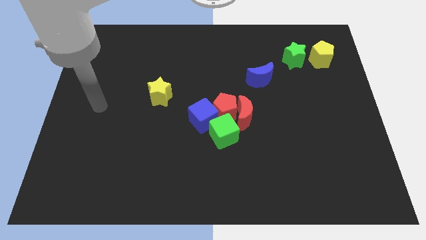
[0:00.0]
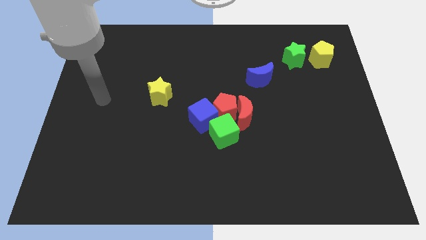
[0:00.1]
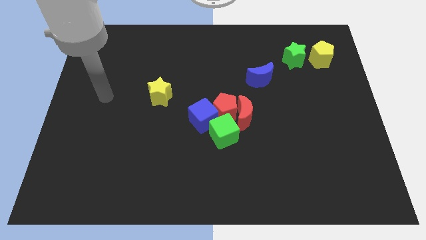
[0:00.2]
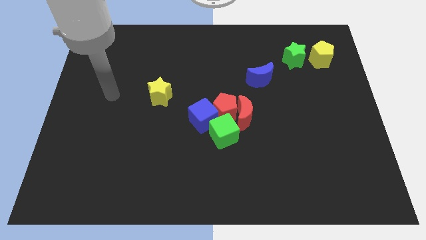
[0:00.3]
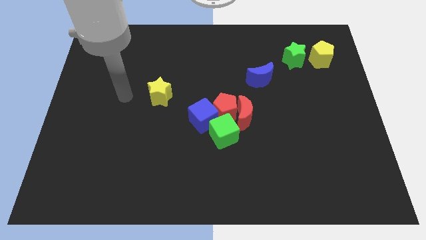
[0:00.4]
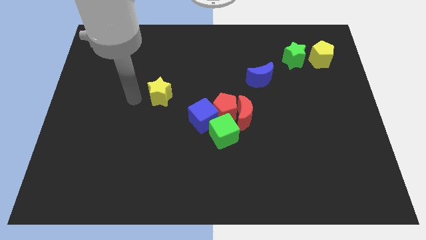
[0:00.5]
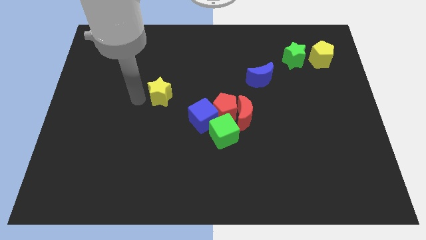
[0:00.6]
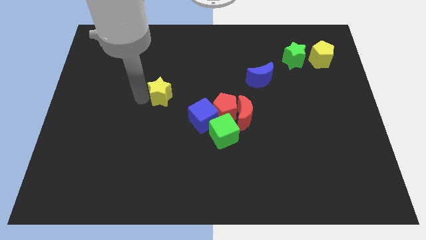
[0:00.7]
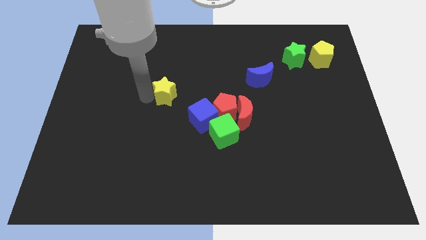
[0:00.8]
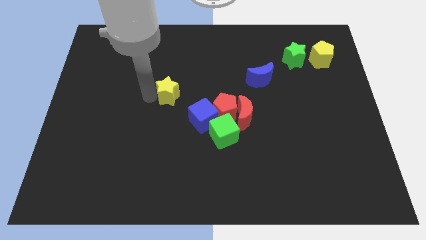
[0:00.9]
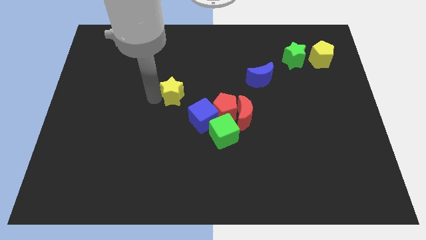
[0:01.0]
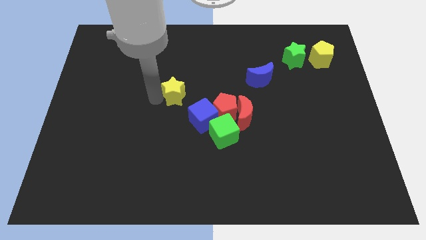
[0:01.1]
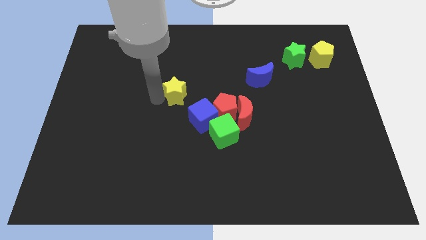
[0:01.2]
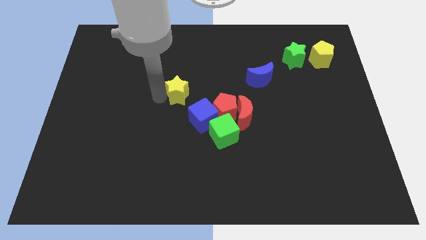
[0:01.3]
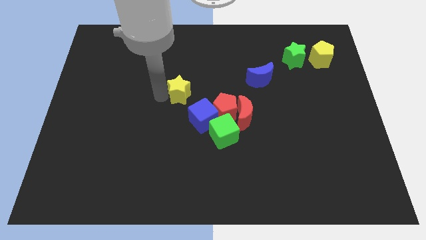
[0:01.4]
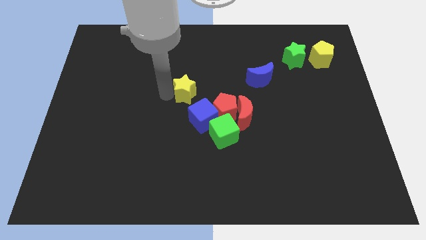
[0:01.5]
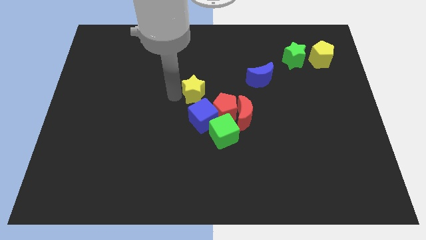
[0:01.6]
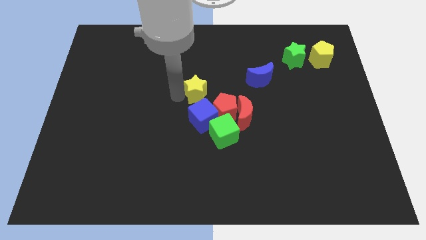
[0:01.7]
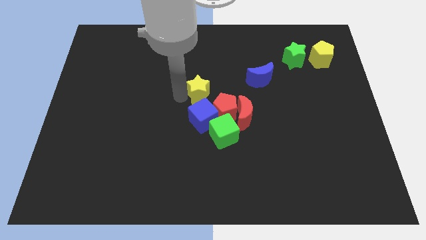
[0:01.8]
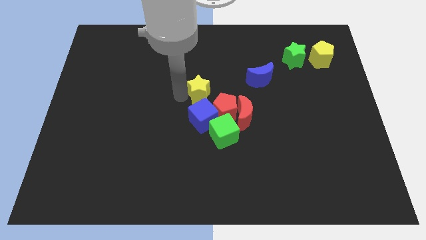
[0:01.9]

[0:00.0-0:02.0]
place the yellow star above the blue cube

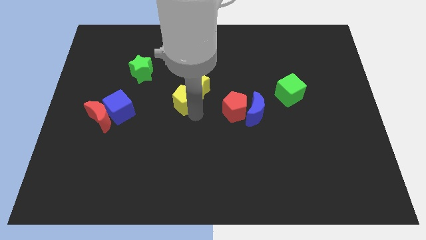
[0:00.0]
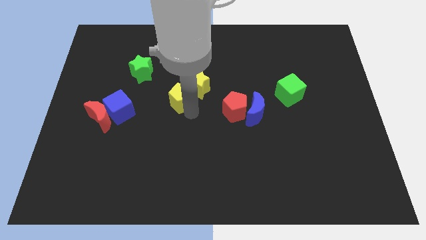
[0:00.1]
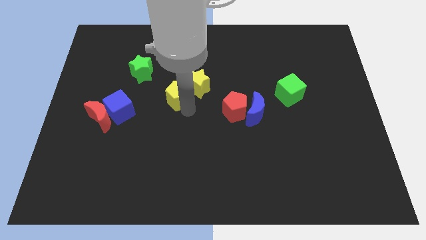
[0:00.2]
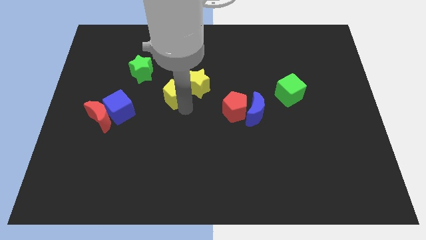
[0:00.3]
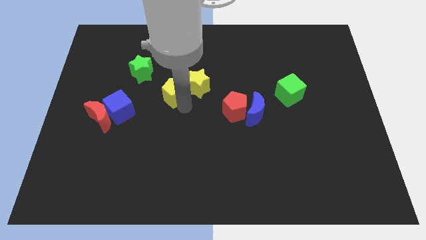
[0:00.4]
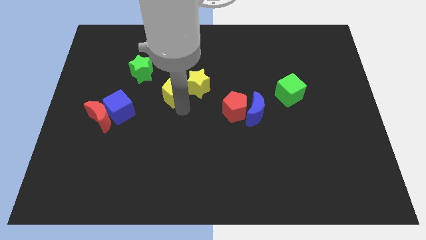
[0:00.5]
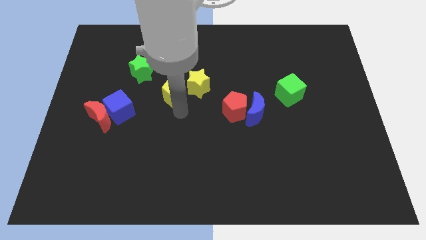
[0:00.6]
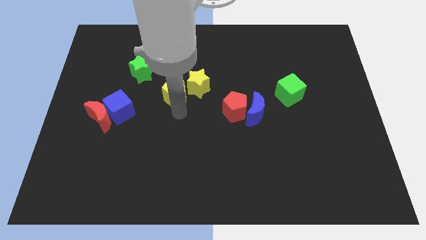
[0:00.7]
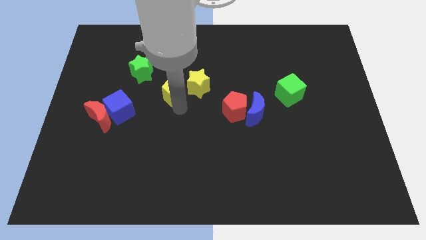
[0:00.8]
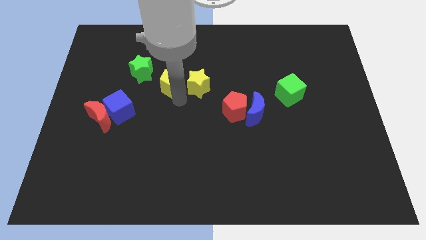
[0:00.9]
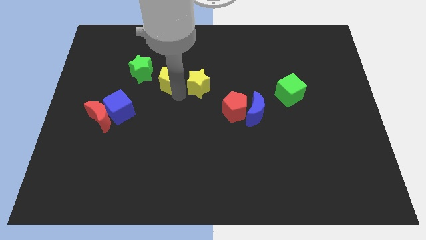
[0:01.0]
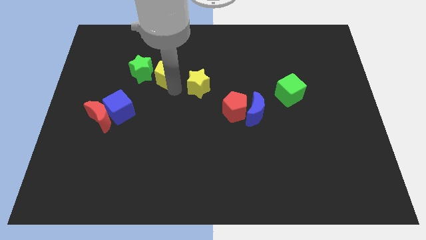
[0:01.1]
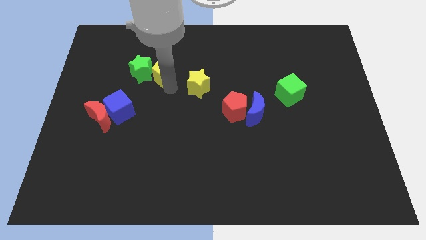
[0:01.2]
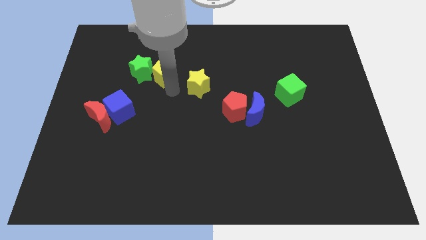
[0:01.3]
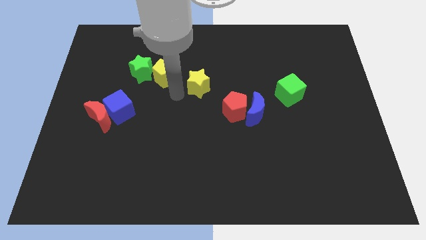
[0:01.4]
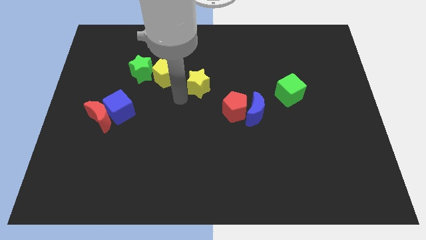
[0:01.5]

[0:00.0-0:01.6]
place the yellow pentagon close to the green star

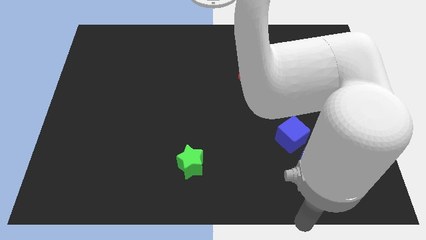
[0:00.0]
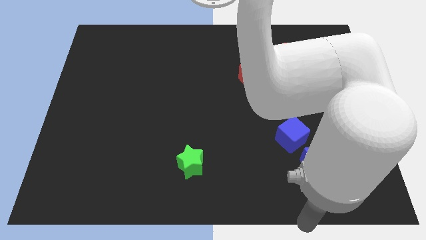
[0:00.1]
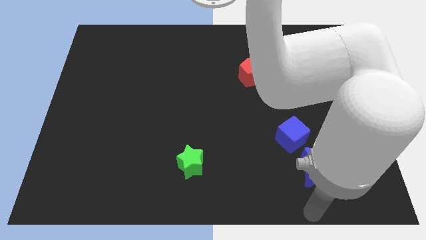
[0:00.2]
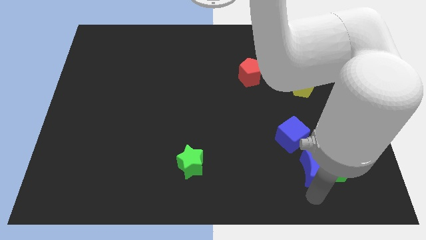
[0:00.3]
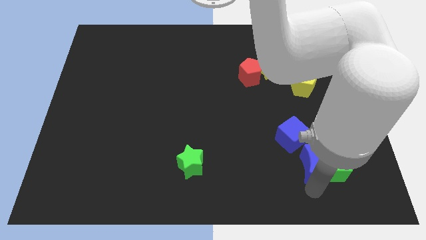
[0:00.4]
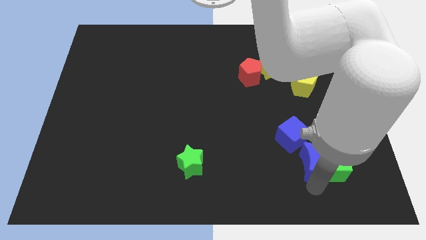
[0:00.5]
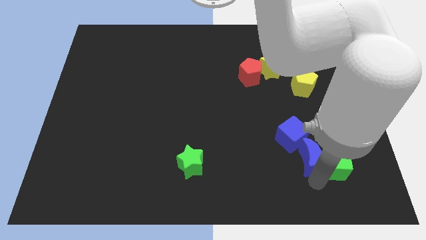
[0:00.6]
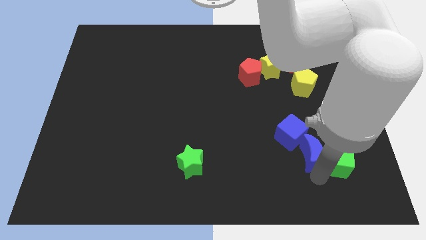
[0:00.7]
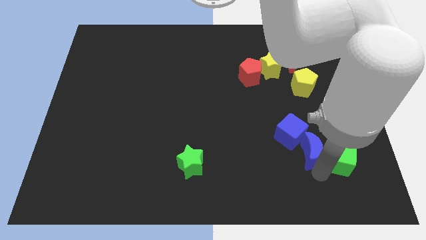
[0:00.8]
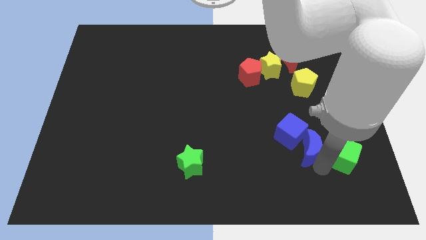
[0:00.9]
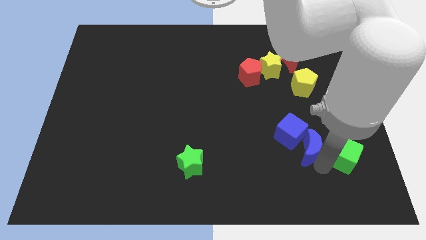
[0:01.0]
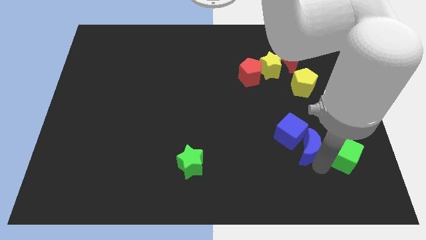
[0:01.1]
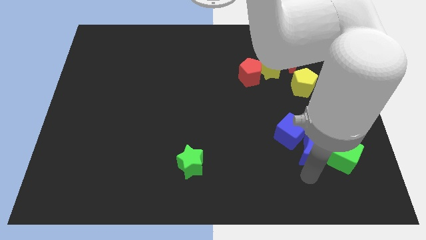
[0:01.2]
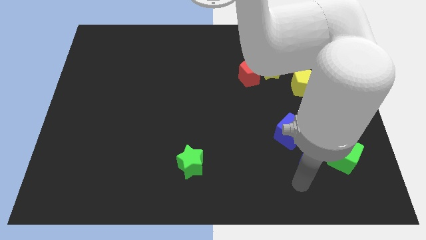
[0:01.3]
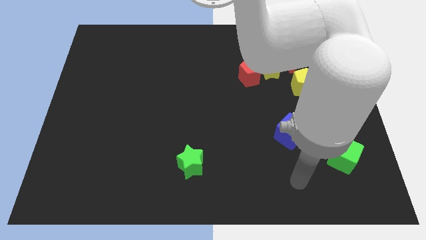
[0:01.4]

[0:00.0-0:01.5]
place the blue moon in between the green cube and blue cube

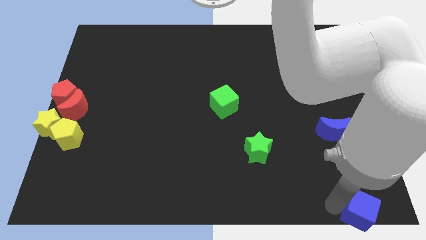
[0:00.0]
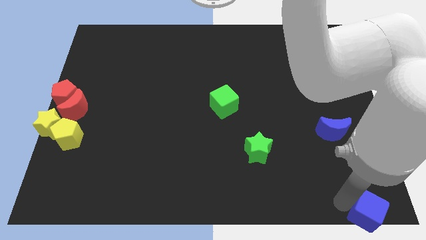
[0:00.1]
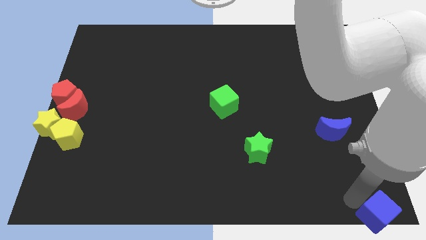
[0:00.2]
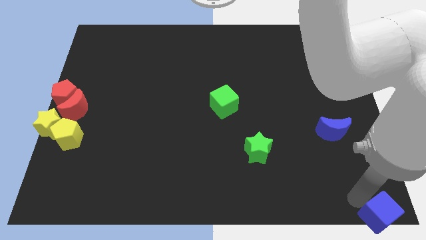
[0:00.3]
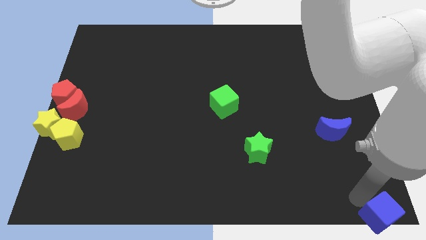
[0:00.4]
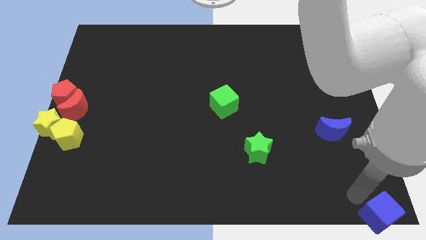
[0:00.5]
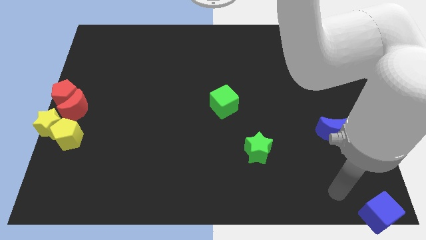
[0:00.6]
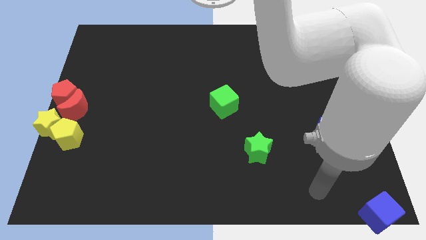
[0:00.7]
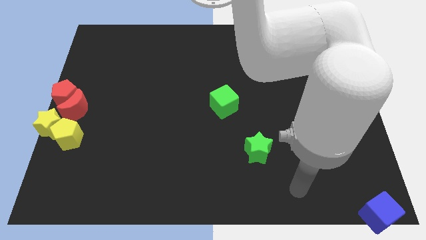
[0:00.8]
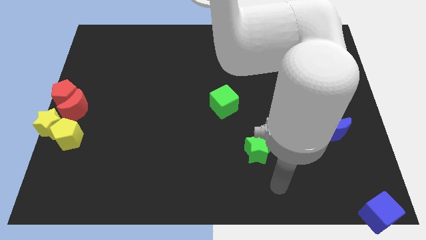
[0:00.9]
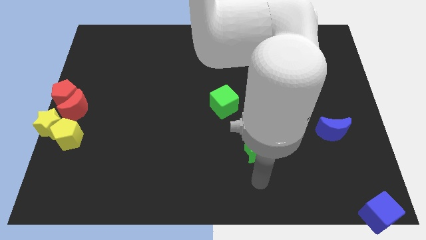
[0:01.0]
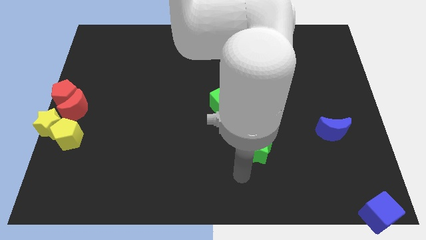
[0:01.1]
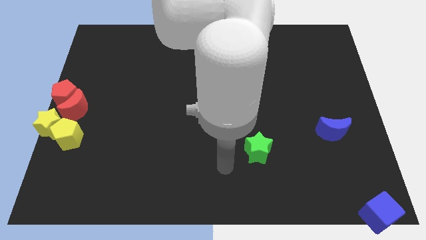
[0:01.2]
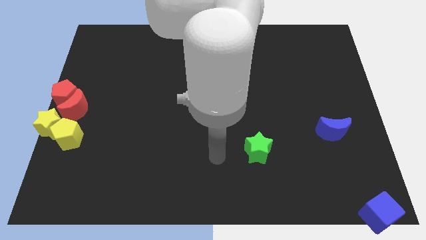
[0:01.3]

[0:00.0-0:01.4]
move the blue cube to the bottom right corner of the board

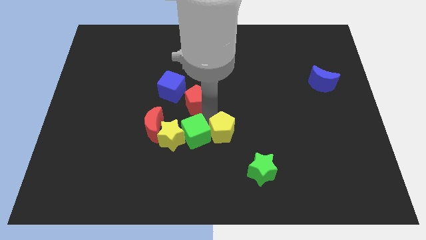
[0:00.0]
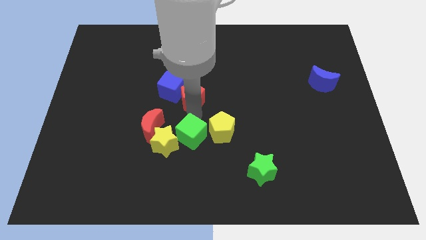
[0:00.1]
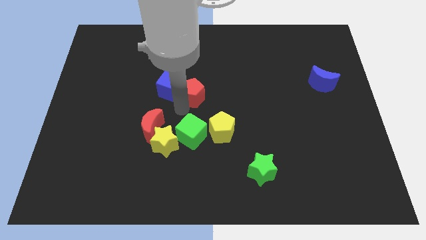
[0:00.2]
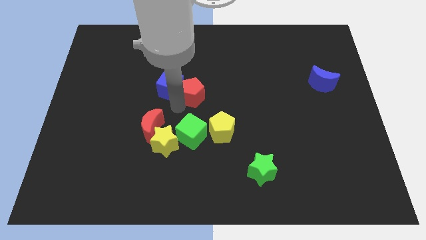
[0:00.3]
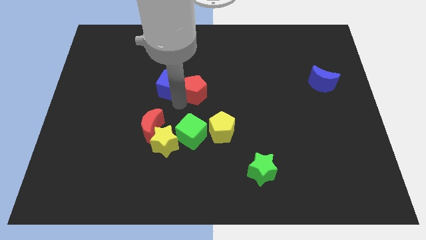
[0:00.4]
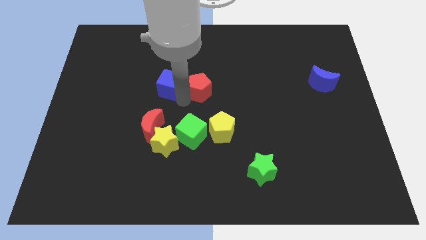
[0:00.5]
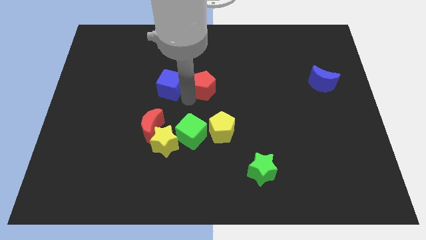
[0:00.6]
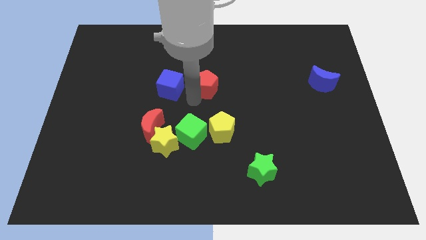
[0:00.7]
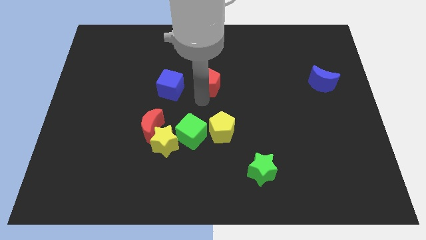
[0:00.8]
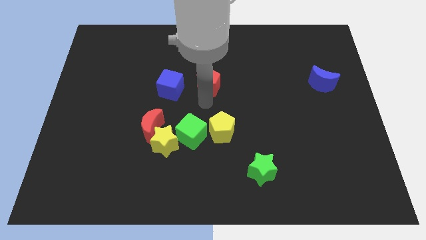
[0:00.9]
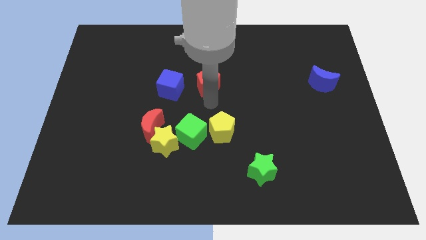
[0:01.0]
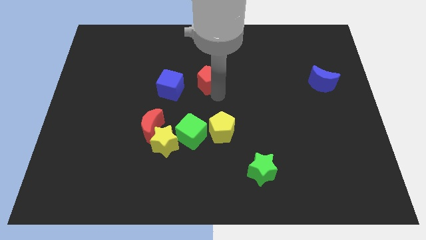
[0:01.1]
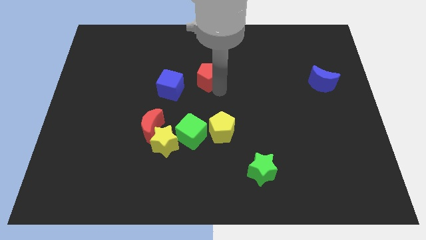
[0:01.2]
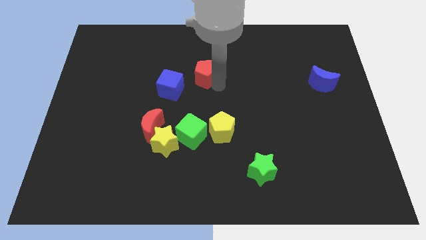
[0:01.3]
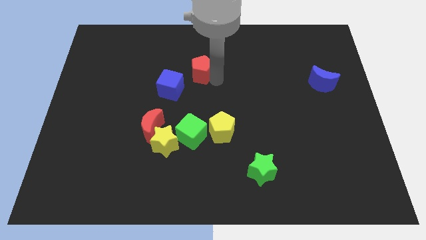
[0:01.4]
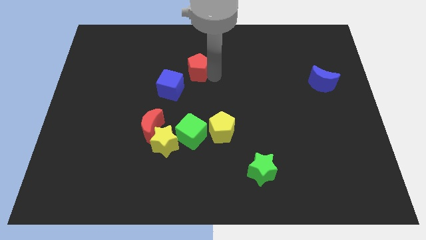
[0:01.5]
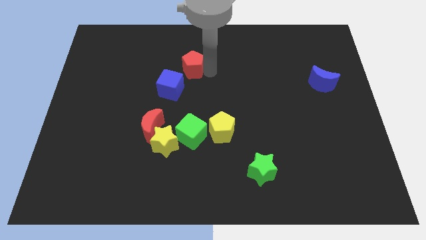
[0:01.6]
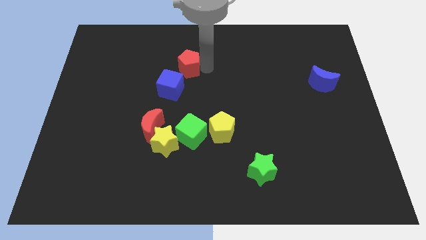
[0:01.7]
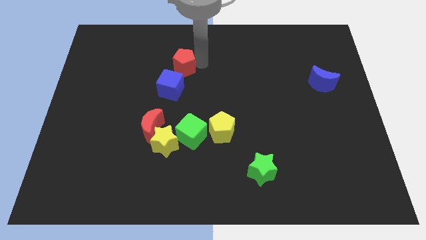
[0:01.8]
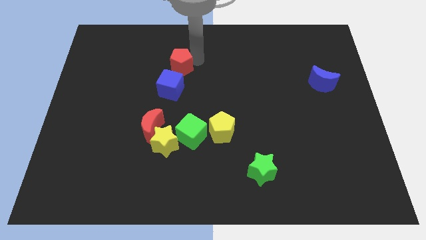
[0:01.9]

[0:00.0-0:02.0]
move the red pentagon to the top of the blue cube

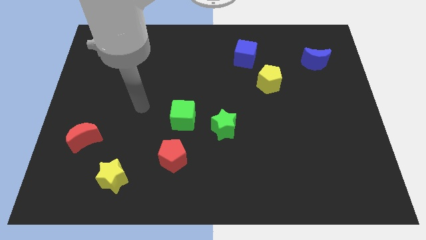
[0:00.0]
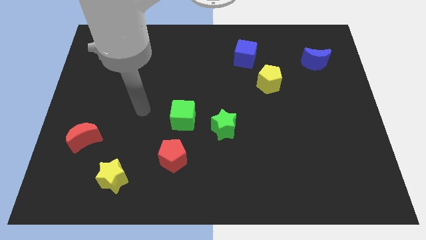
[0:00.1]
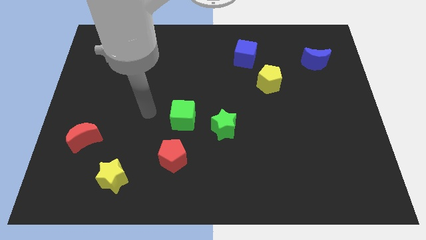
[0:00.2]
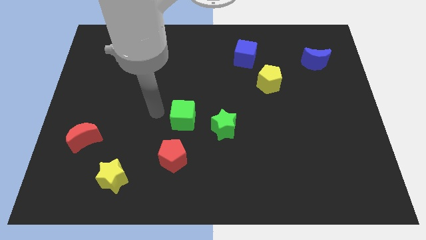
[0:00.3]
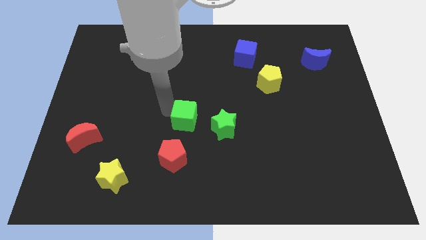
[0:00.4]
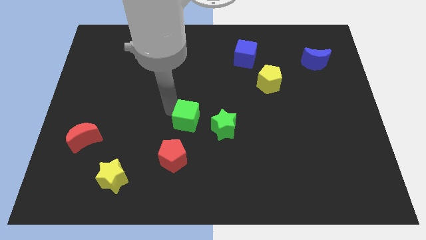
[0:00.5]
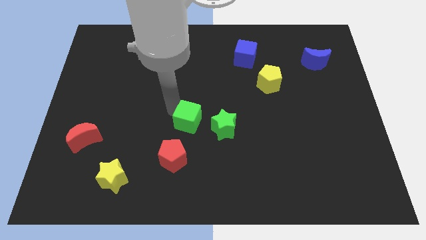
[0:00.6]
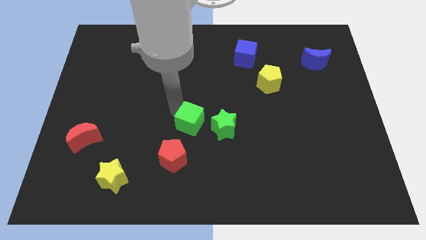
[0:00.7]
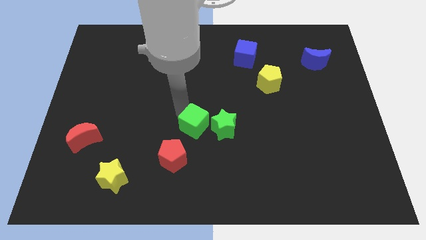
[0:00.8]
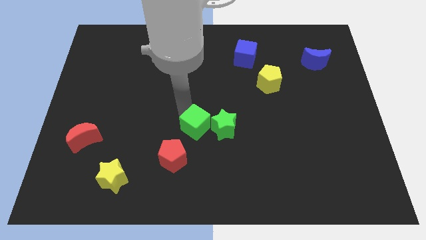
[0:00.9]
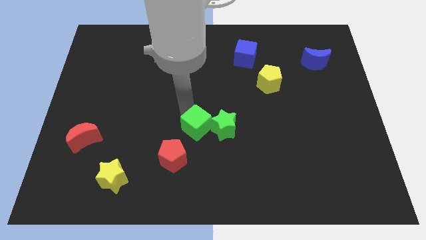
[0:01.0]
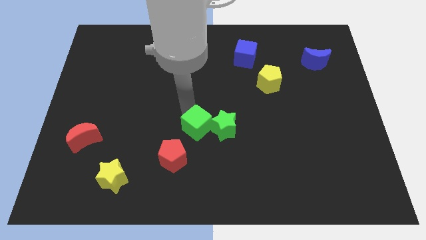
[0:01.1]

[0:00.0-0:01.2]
push the green cube into green star
